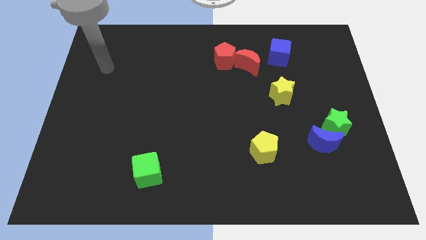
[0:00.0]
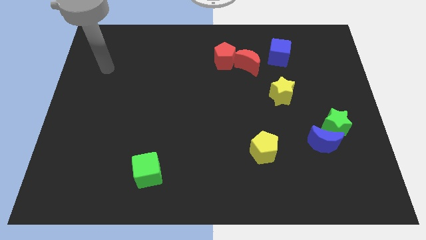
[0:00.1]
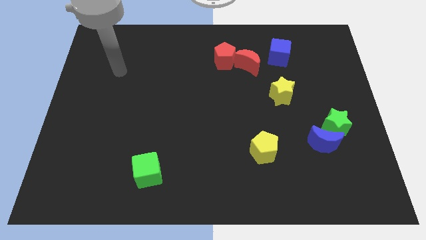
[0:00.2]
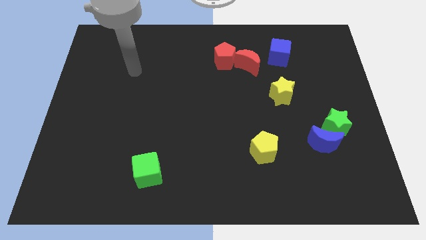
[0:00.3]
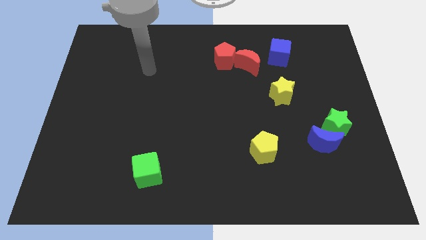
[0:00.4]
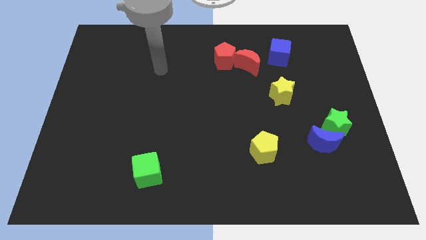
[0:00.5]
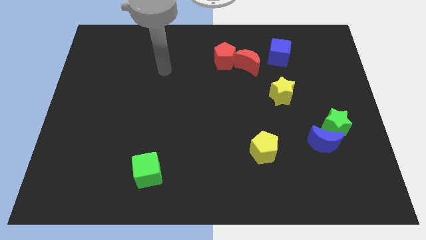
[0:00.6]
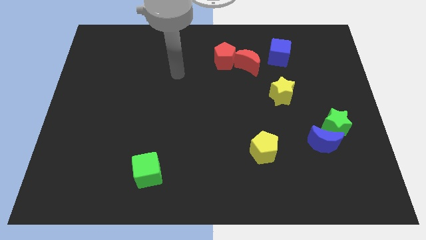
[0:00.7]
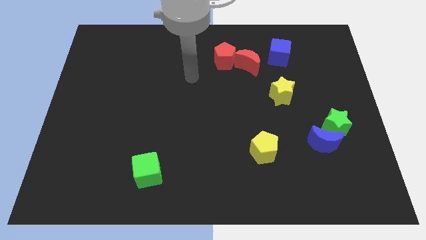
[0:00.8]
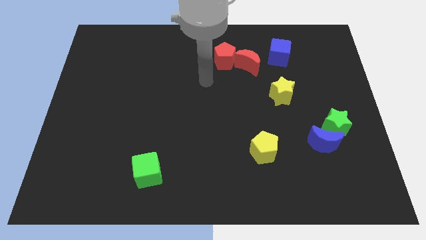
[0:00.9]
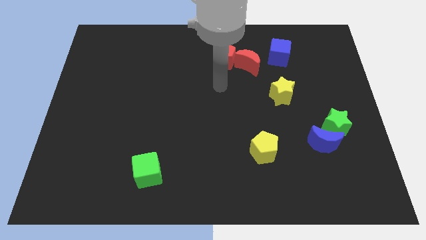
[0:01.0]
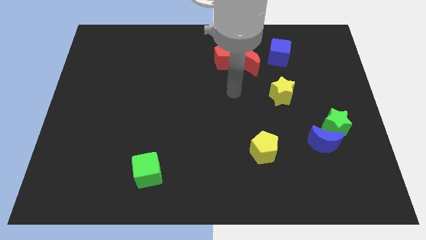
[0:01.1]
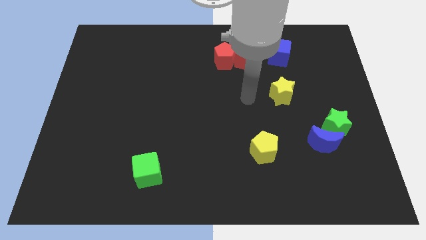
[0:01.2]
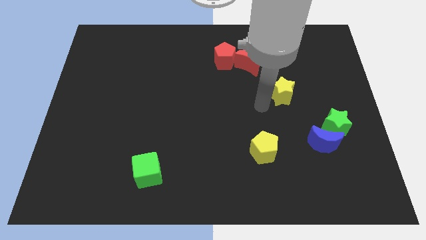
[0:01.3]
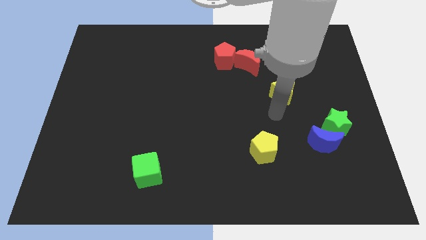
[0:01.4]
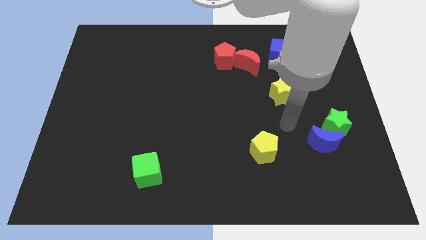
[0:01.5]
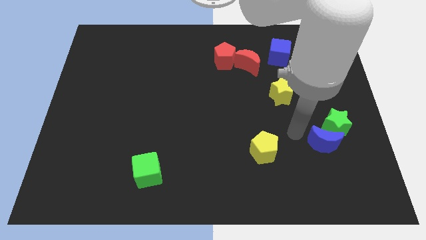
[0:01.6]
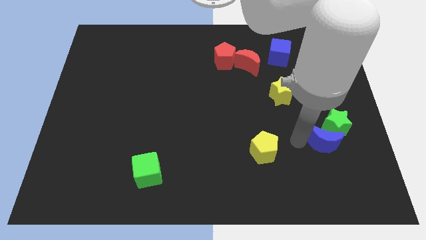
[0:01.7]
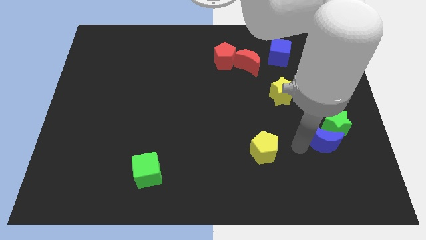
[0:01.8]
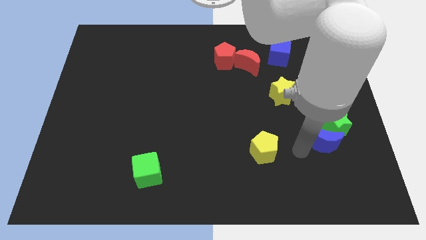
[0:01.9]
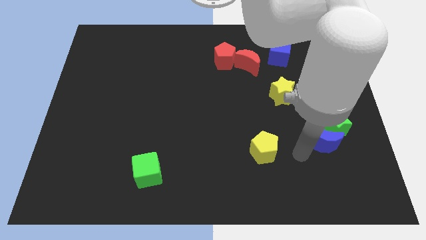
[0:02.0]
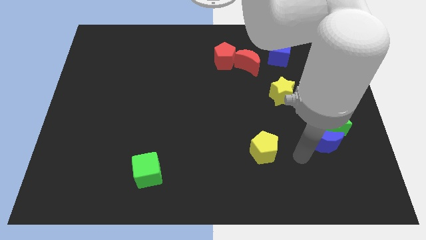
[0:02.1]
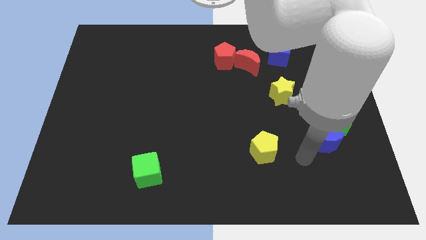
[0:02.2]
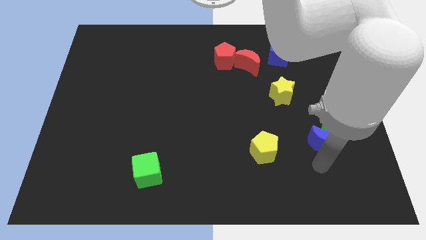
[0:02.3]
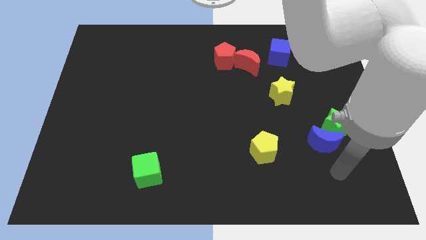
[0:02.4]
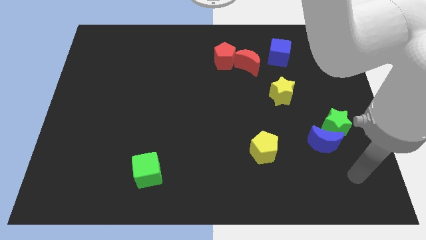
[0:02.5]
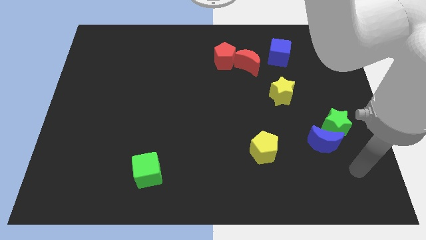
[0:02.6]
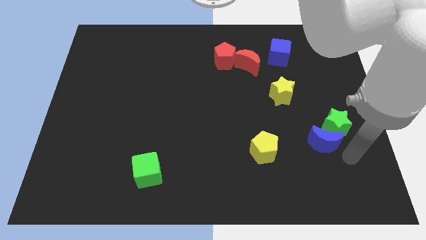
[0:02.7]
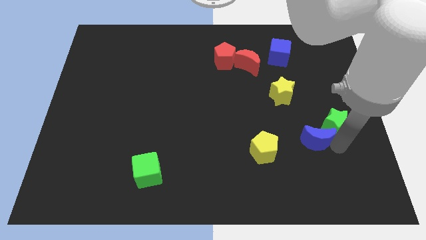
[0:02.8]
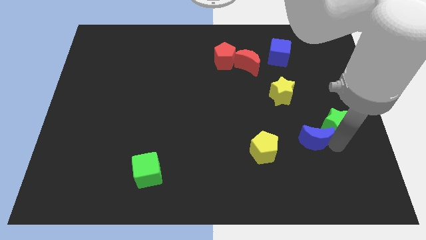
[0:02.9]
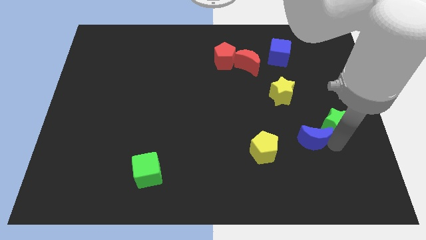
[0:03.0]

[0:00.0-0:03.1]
move the arm close to the blue crescent

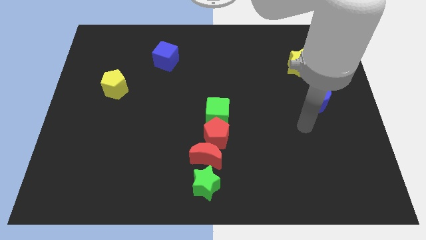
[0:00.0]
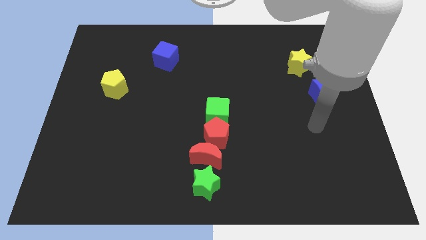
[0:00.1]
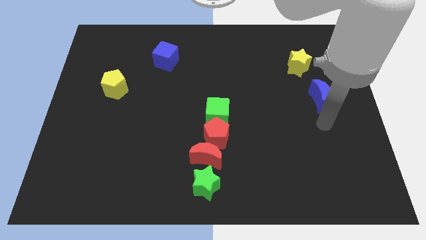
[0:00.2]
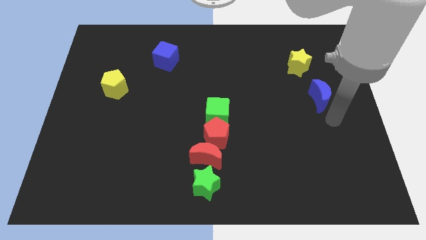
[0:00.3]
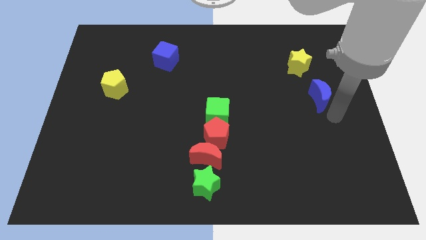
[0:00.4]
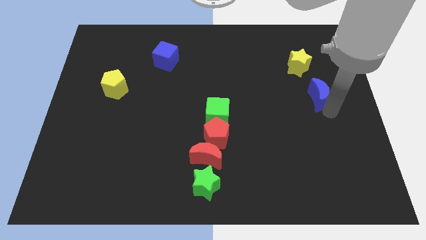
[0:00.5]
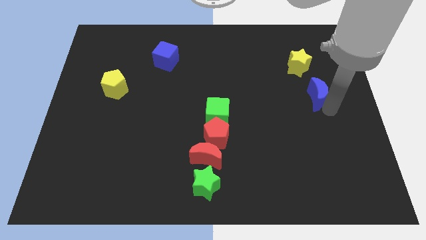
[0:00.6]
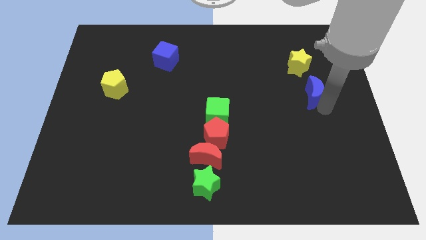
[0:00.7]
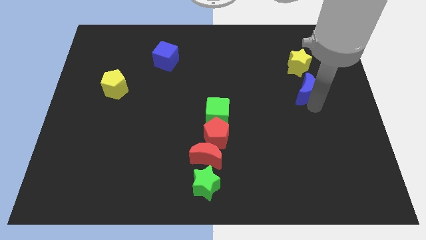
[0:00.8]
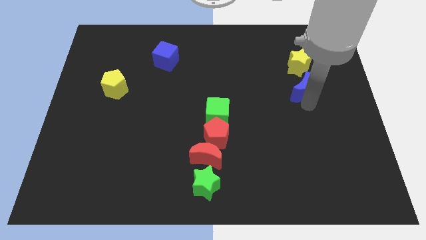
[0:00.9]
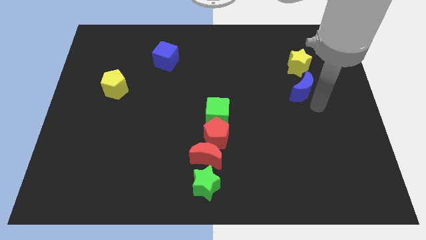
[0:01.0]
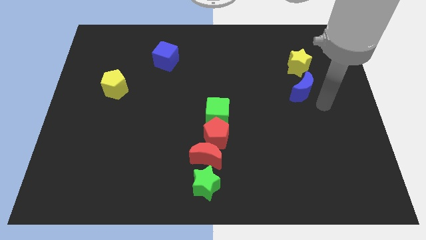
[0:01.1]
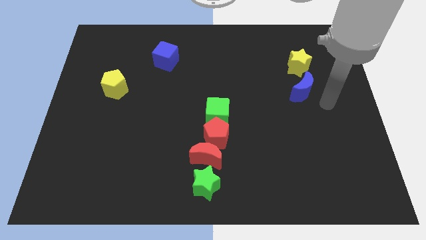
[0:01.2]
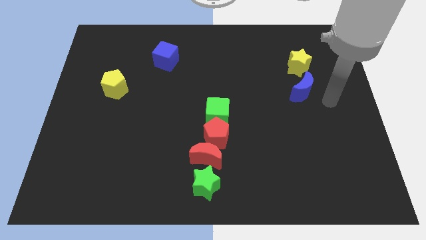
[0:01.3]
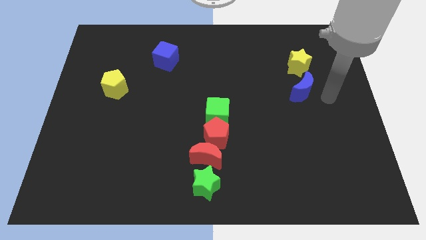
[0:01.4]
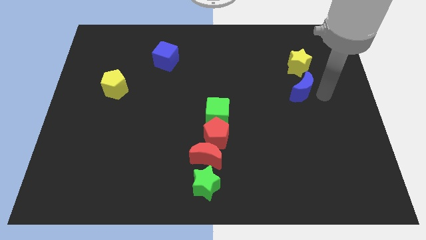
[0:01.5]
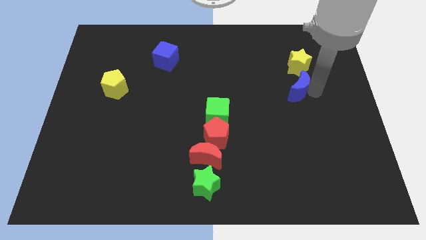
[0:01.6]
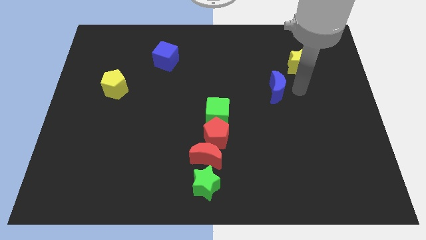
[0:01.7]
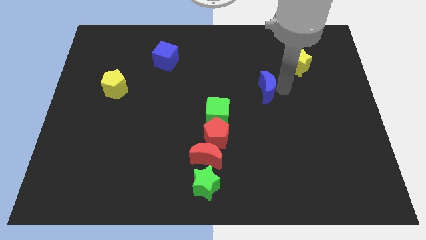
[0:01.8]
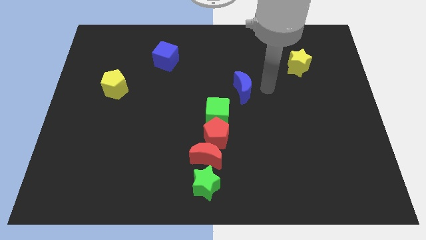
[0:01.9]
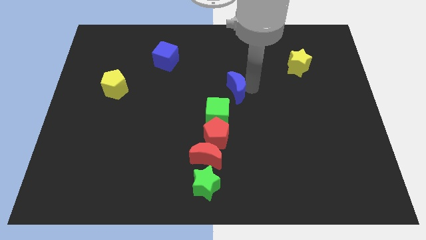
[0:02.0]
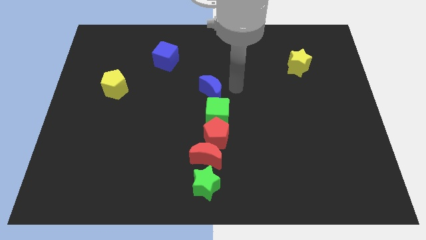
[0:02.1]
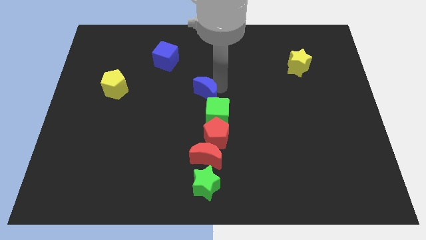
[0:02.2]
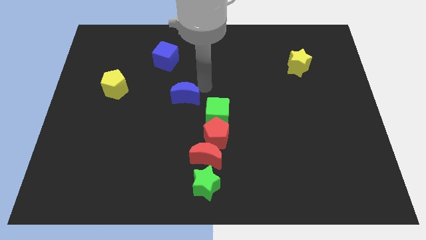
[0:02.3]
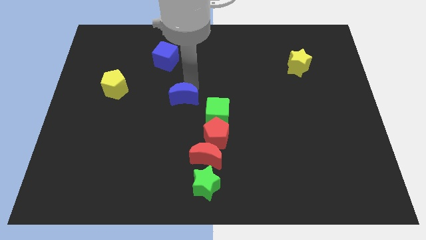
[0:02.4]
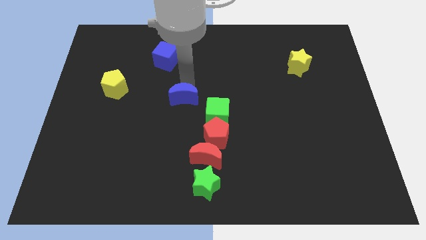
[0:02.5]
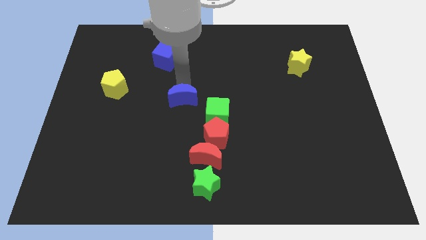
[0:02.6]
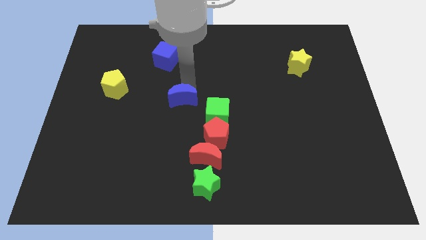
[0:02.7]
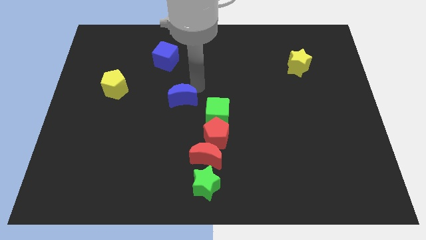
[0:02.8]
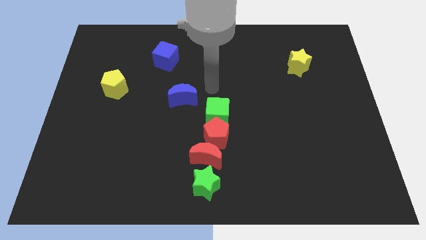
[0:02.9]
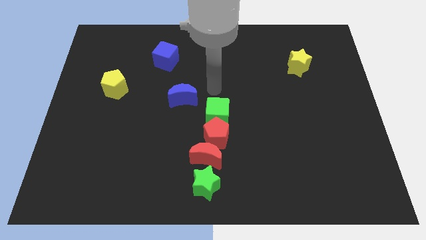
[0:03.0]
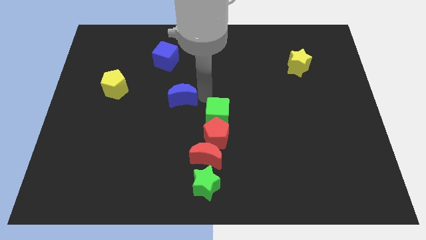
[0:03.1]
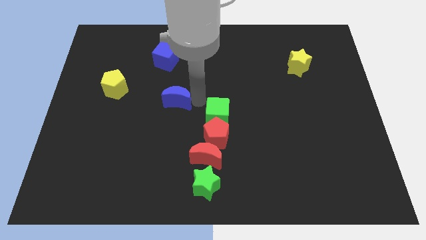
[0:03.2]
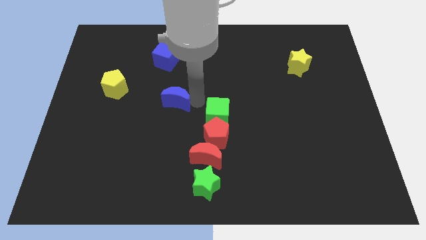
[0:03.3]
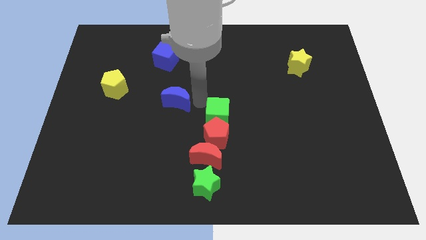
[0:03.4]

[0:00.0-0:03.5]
move the blue crescent to the left of the board

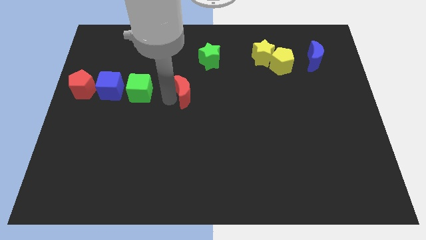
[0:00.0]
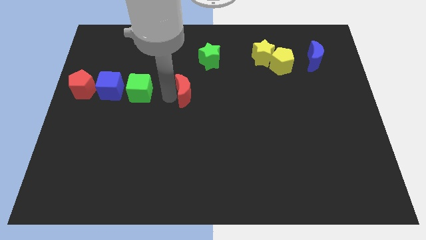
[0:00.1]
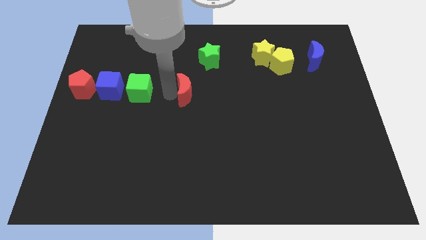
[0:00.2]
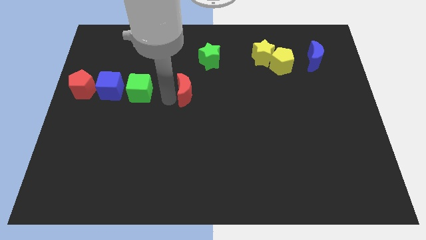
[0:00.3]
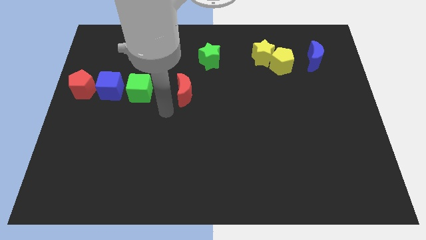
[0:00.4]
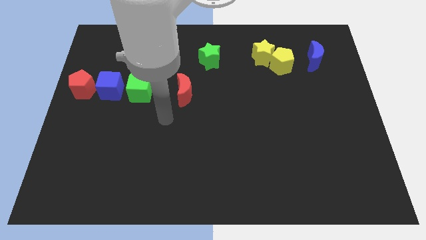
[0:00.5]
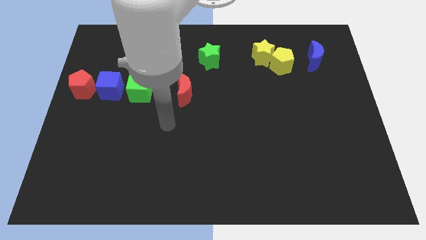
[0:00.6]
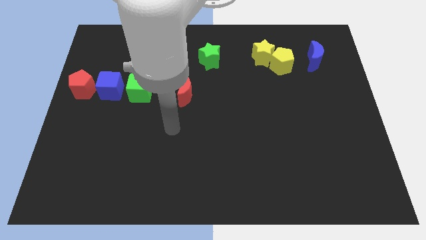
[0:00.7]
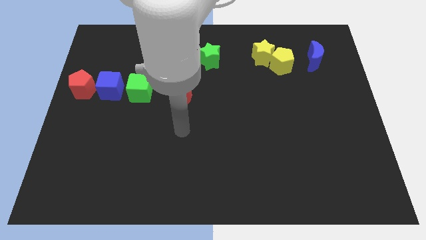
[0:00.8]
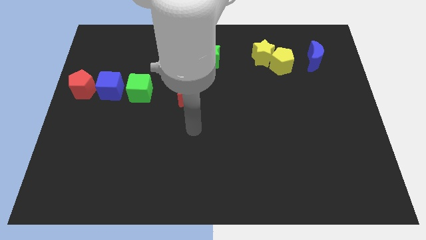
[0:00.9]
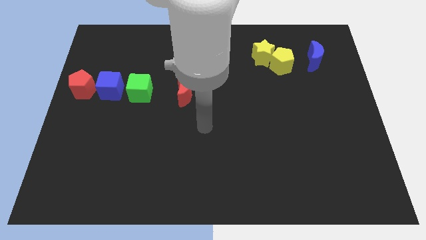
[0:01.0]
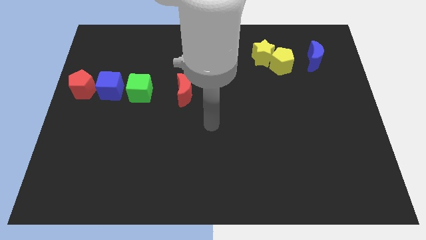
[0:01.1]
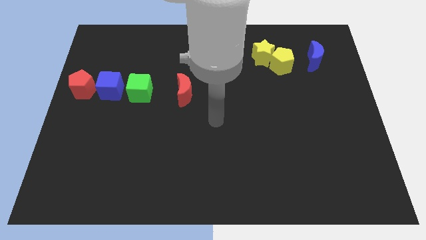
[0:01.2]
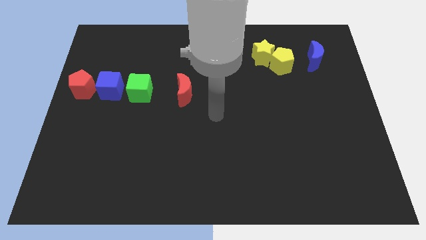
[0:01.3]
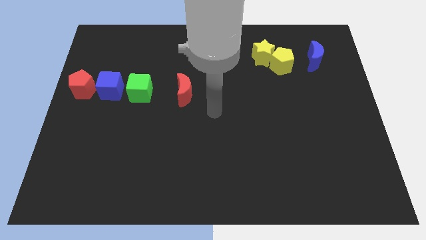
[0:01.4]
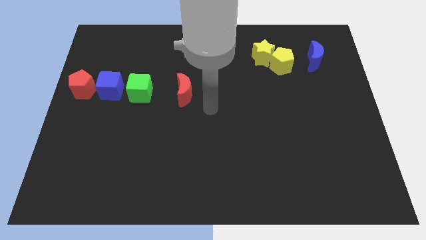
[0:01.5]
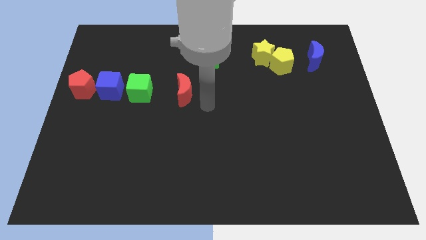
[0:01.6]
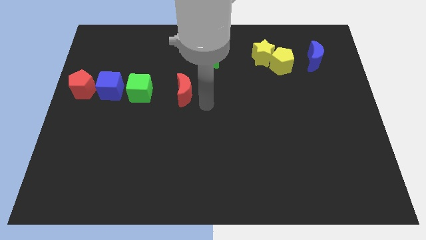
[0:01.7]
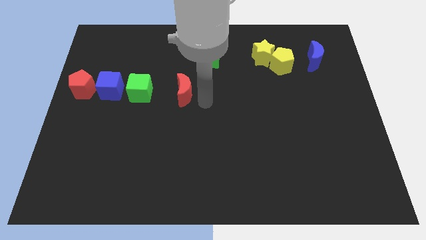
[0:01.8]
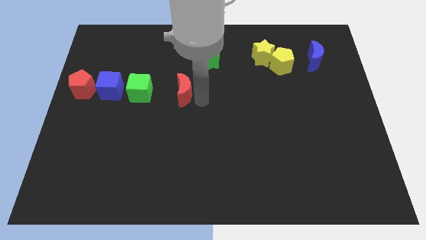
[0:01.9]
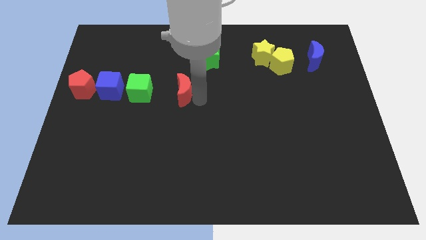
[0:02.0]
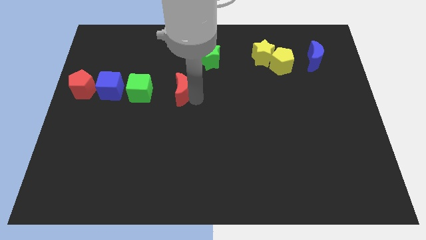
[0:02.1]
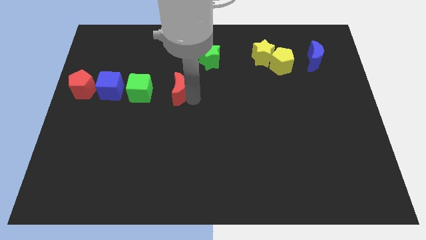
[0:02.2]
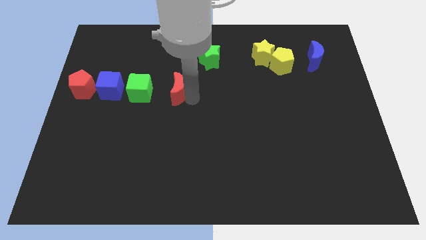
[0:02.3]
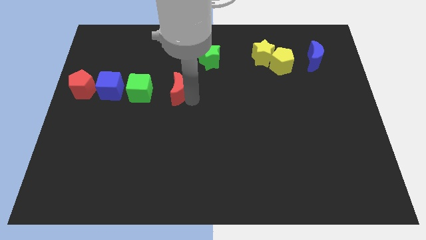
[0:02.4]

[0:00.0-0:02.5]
push red moon to the green cube

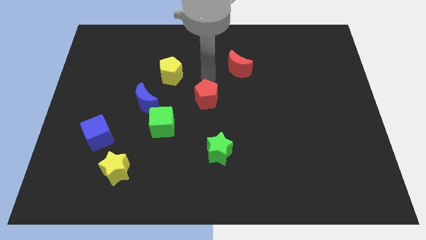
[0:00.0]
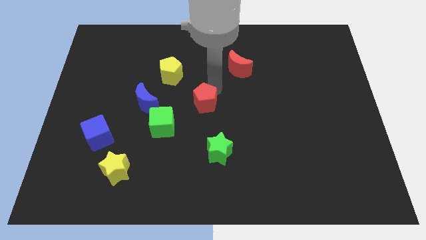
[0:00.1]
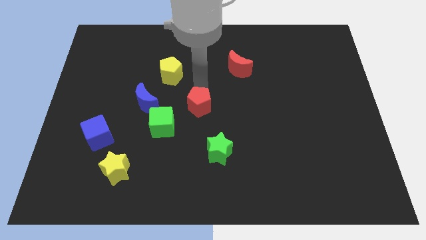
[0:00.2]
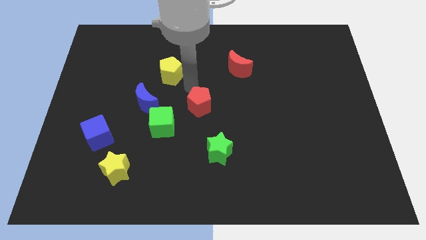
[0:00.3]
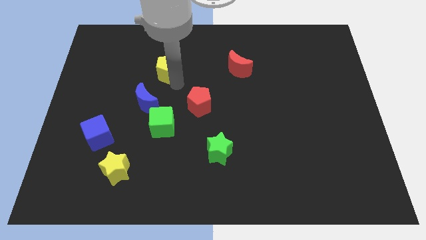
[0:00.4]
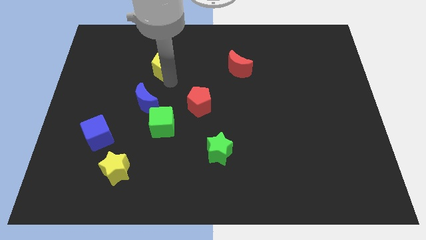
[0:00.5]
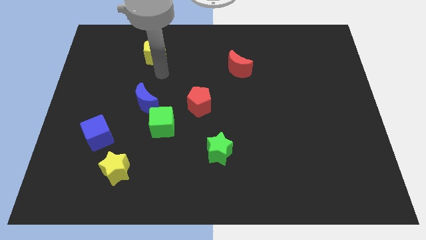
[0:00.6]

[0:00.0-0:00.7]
push yellow star above green cube
